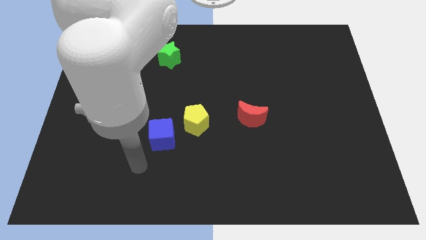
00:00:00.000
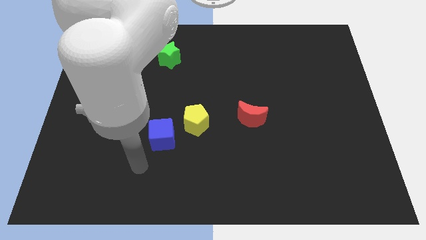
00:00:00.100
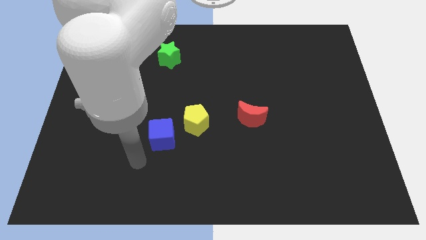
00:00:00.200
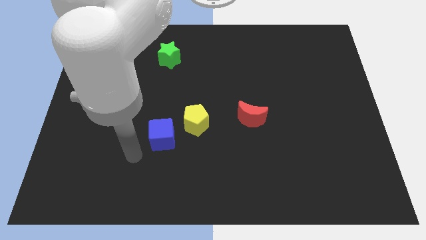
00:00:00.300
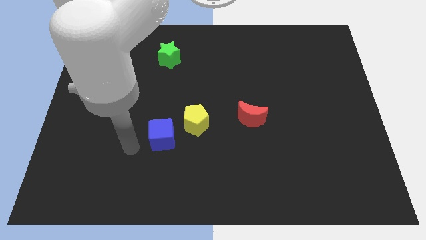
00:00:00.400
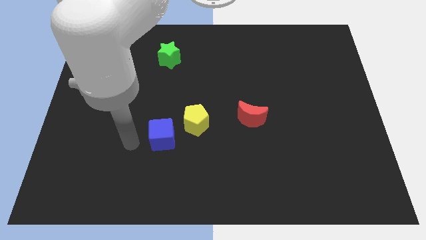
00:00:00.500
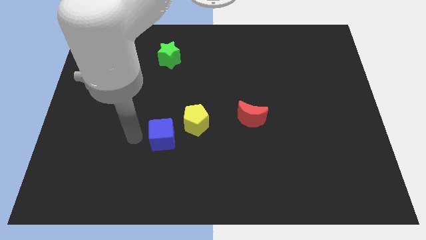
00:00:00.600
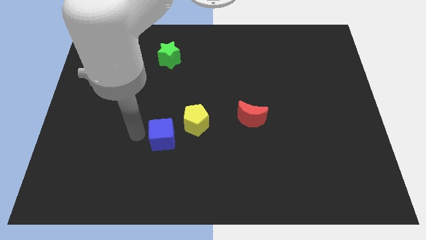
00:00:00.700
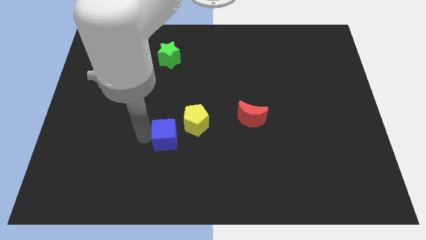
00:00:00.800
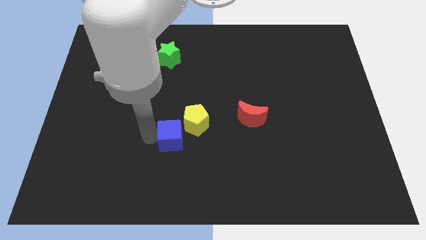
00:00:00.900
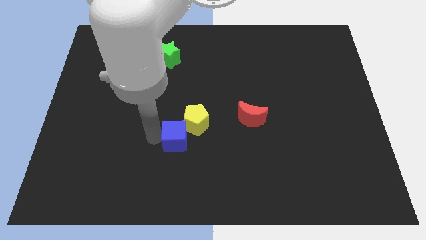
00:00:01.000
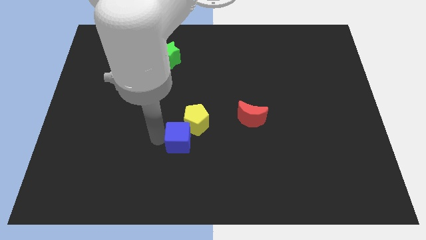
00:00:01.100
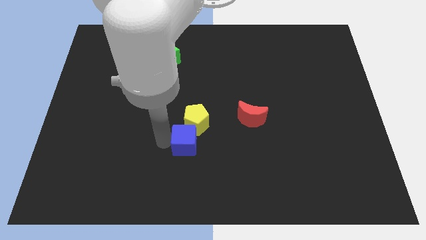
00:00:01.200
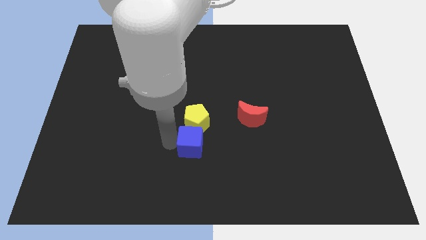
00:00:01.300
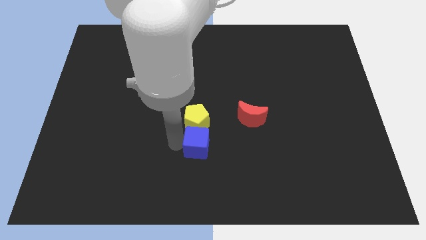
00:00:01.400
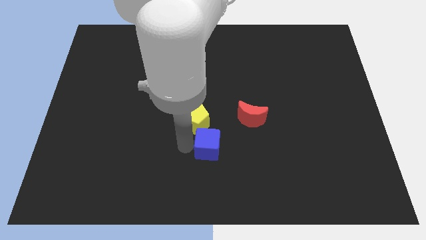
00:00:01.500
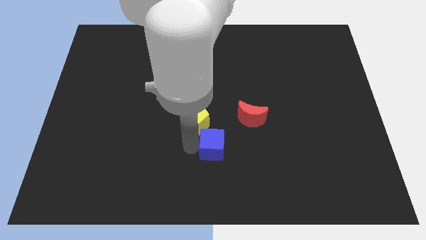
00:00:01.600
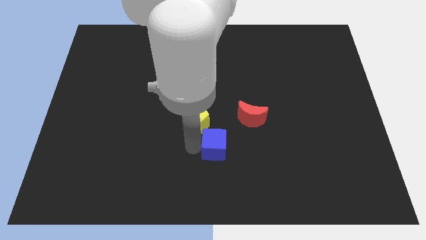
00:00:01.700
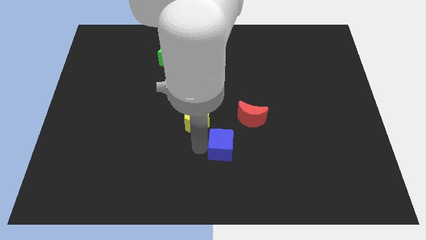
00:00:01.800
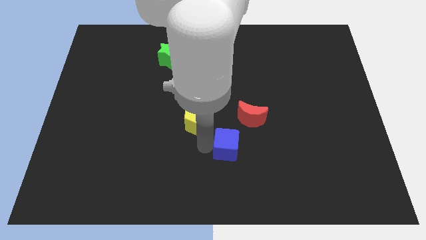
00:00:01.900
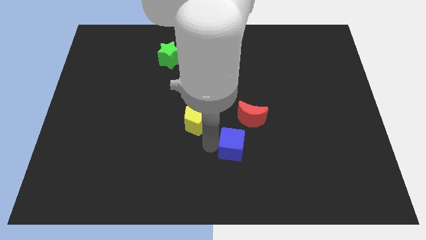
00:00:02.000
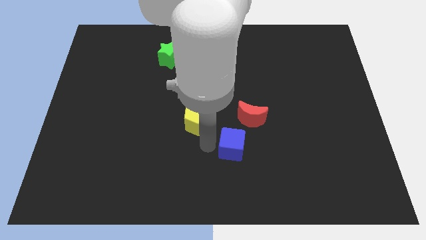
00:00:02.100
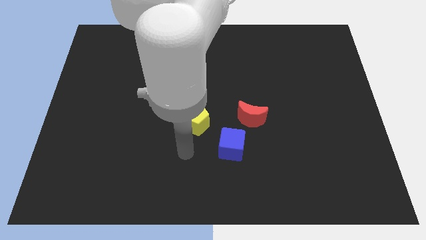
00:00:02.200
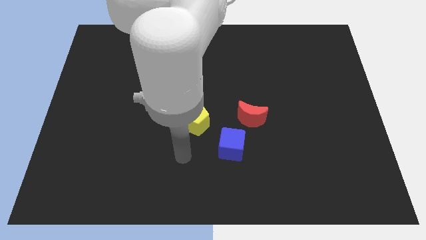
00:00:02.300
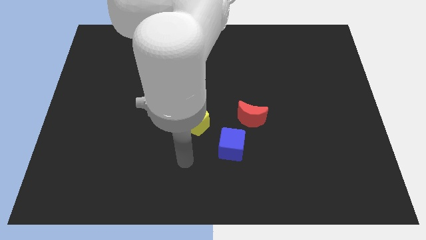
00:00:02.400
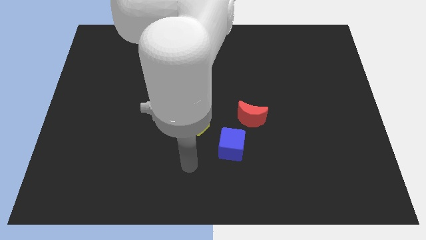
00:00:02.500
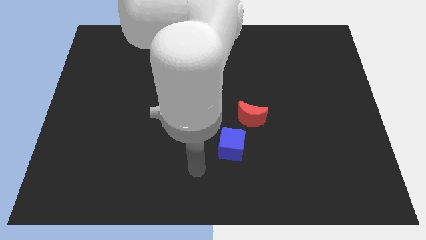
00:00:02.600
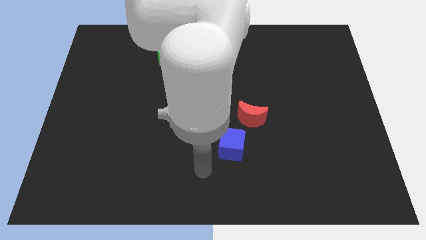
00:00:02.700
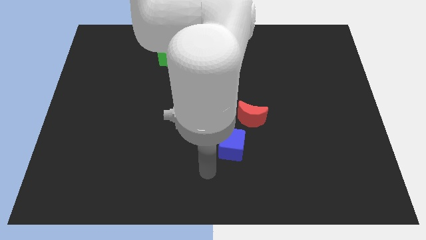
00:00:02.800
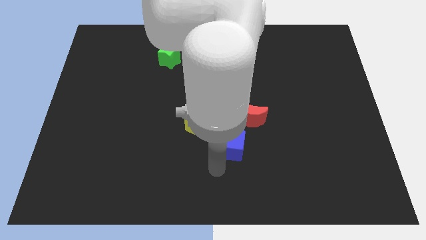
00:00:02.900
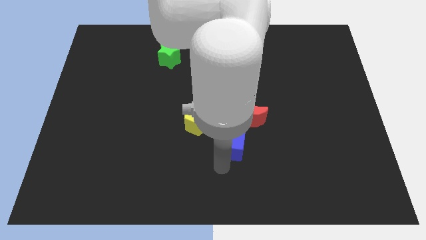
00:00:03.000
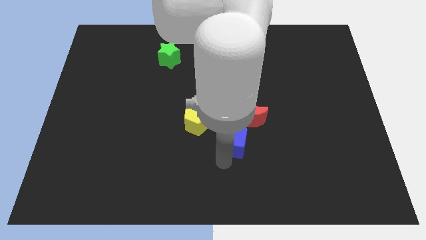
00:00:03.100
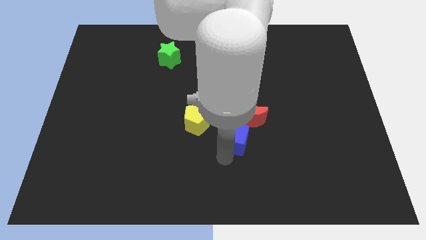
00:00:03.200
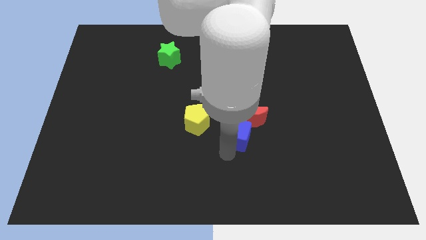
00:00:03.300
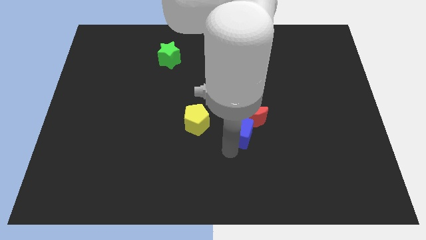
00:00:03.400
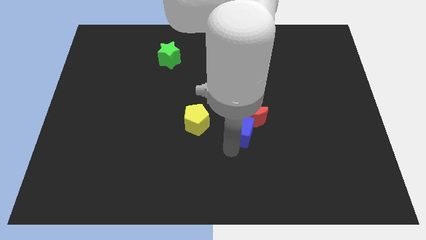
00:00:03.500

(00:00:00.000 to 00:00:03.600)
put the blue block to the red block

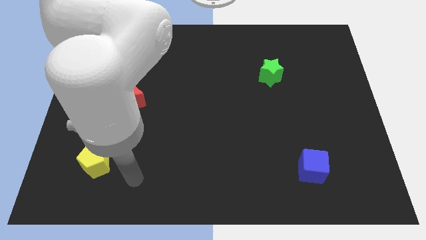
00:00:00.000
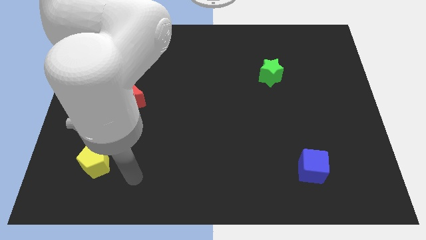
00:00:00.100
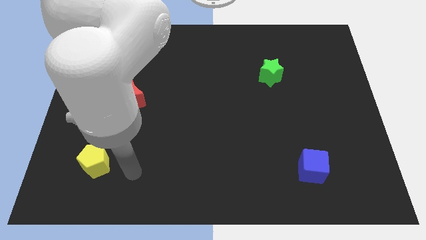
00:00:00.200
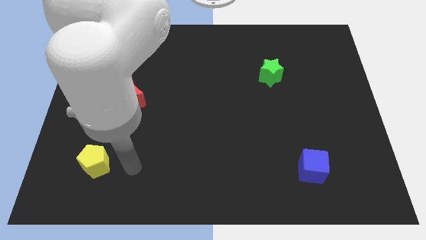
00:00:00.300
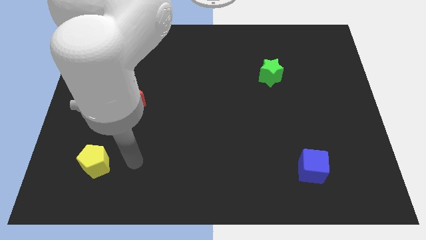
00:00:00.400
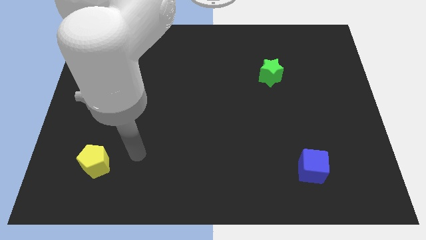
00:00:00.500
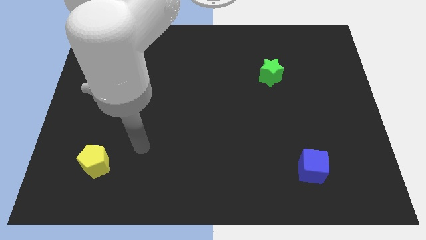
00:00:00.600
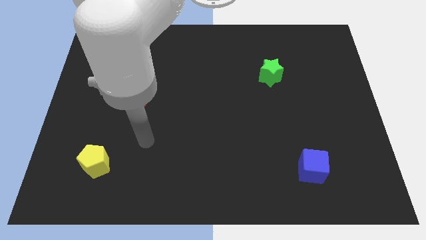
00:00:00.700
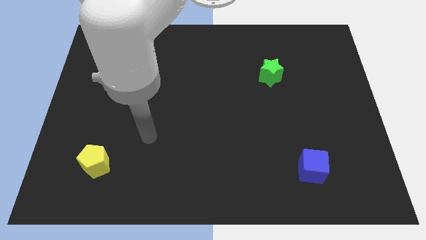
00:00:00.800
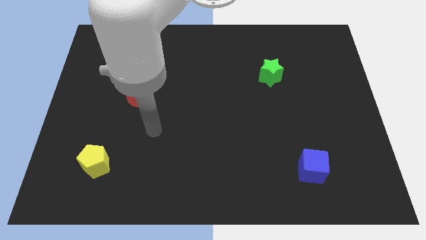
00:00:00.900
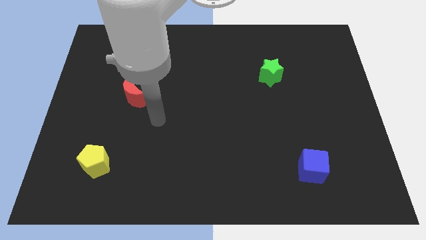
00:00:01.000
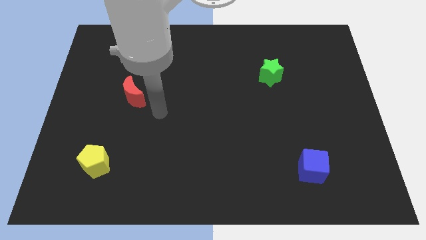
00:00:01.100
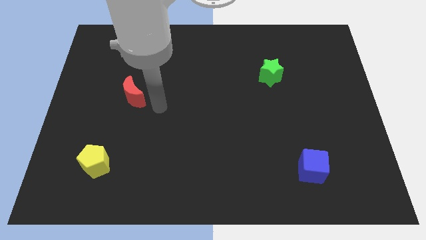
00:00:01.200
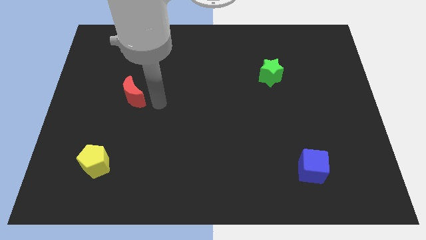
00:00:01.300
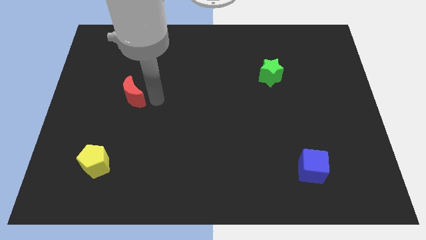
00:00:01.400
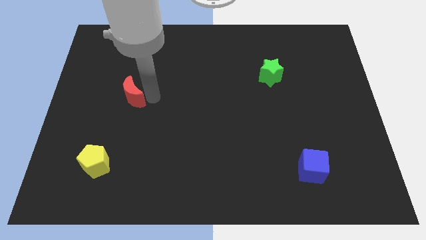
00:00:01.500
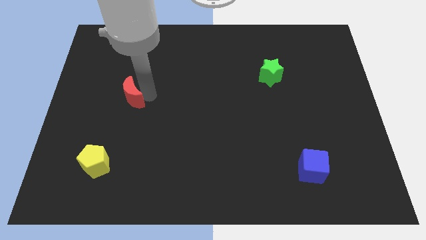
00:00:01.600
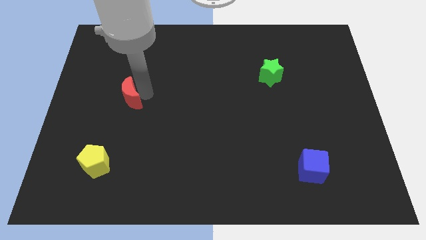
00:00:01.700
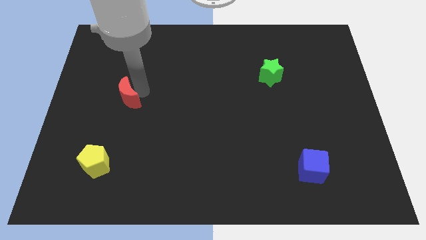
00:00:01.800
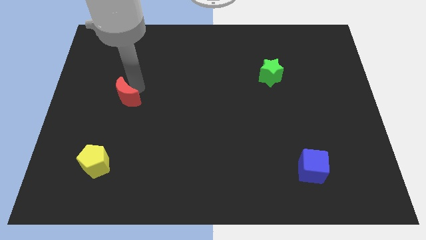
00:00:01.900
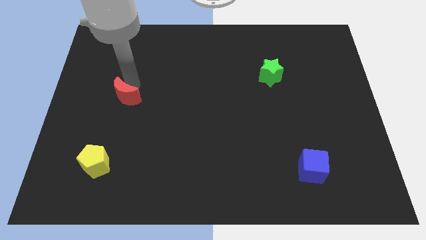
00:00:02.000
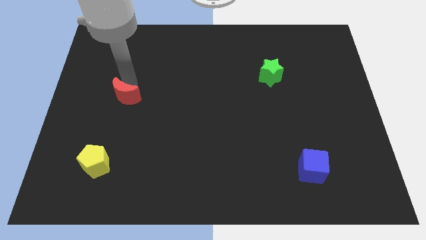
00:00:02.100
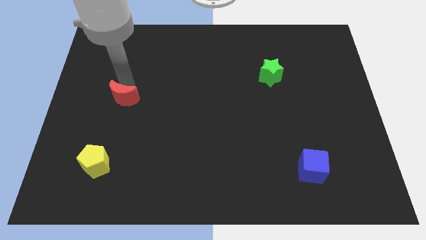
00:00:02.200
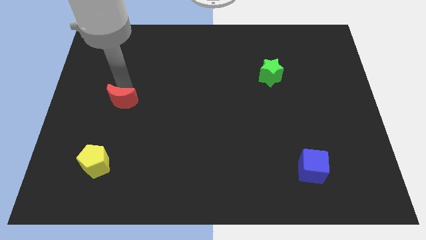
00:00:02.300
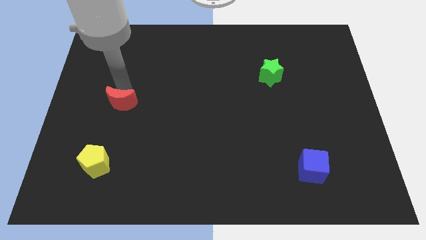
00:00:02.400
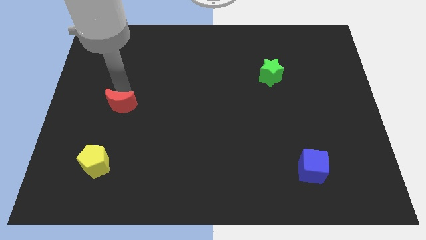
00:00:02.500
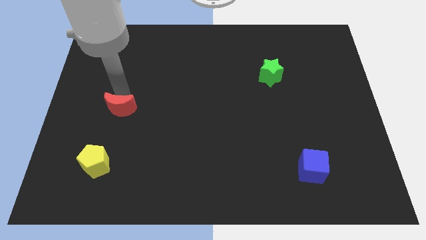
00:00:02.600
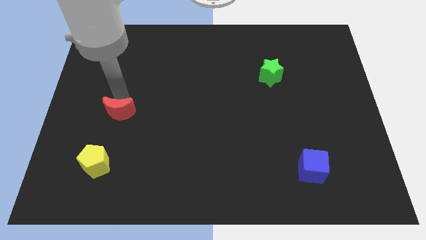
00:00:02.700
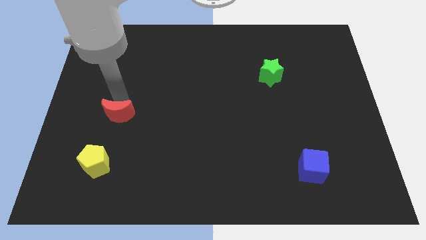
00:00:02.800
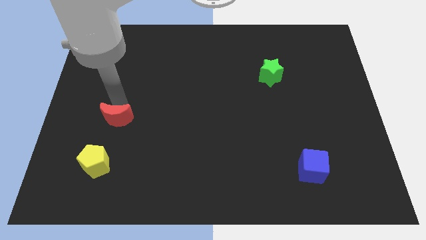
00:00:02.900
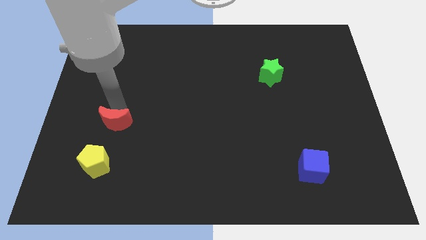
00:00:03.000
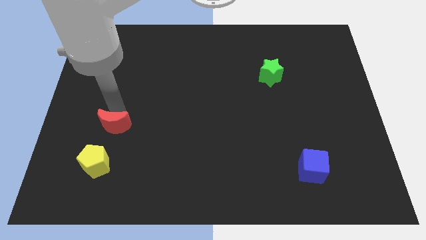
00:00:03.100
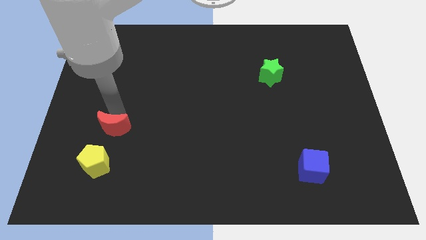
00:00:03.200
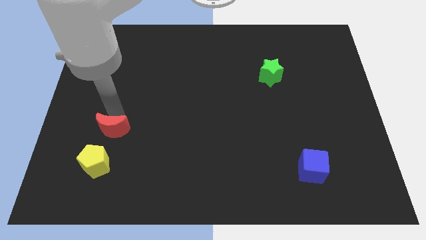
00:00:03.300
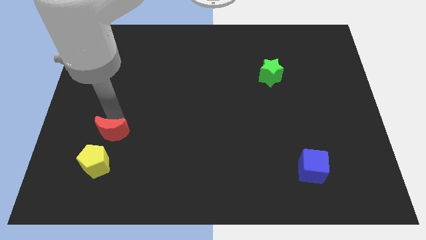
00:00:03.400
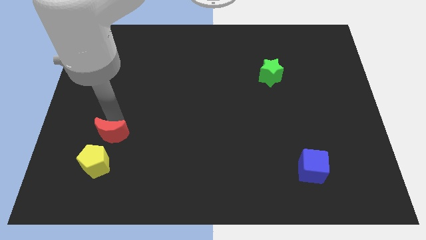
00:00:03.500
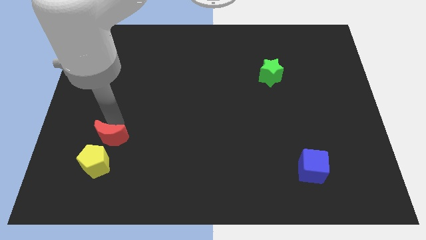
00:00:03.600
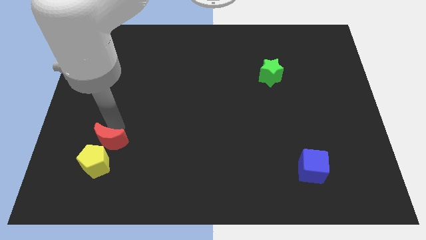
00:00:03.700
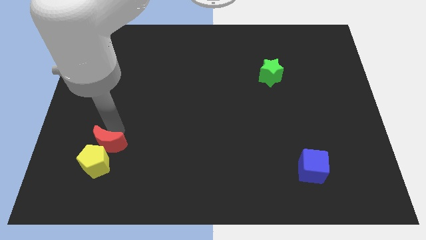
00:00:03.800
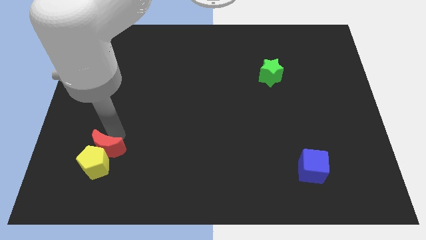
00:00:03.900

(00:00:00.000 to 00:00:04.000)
put the moon next to the yellow block

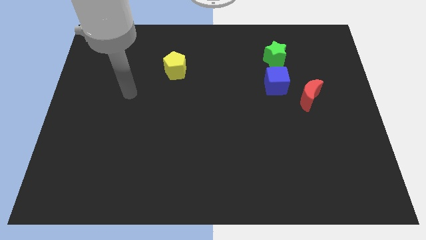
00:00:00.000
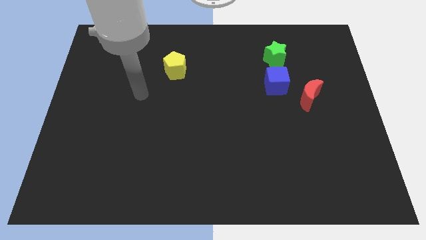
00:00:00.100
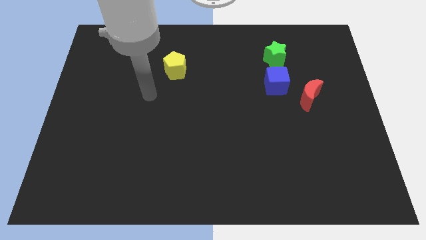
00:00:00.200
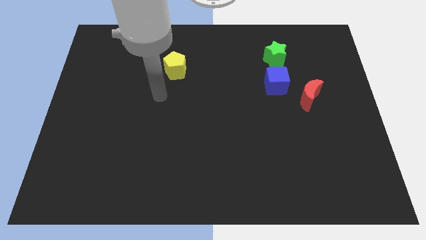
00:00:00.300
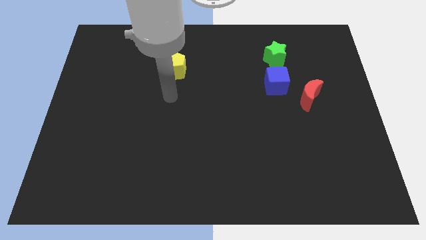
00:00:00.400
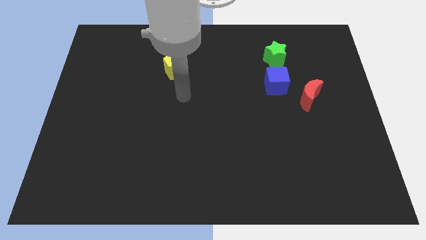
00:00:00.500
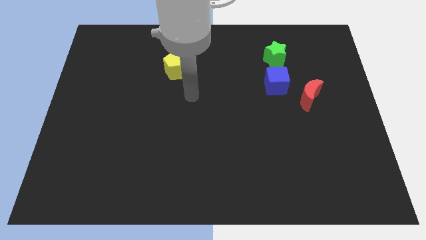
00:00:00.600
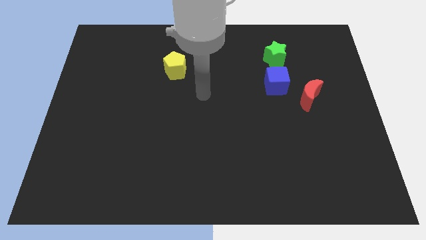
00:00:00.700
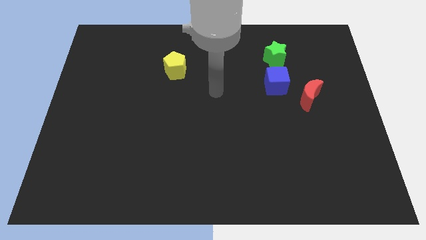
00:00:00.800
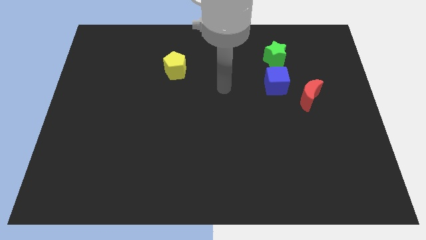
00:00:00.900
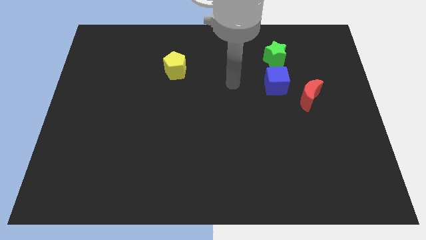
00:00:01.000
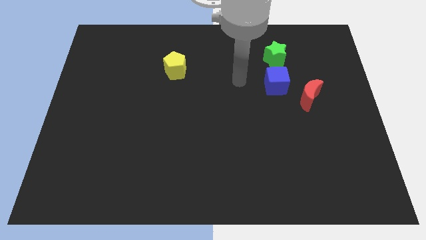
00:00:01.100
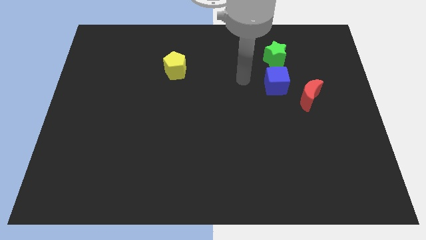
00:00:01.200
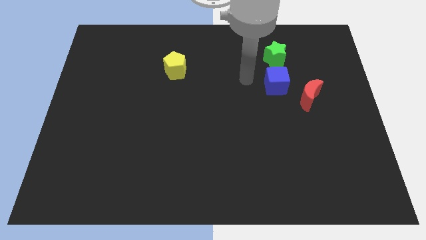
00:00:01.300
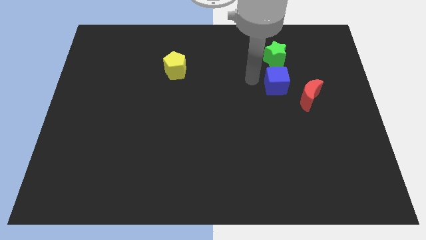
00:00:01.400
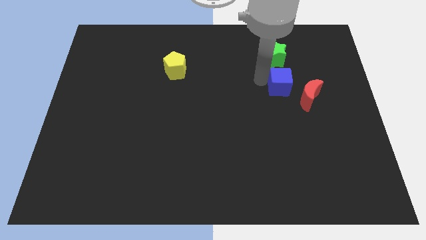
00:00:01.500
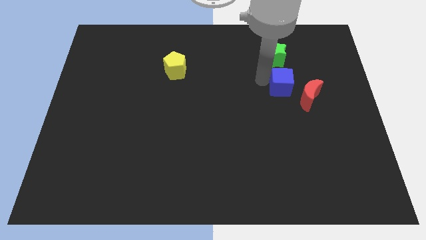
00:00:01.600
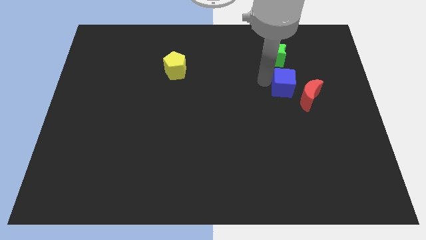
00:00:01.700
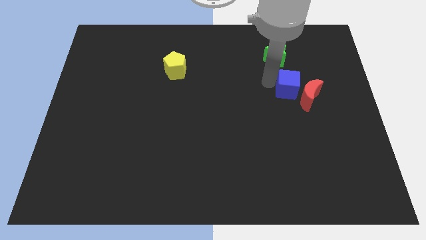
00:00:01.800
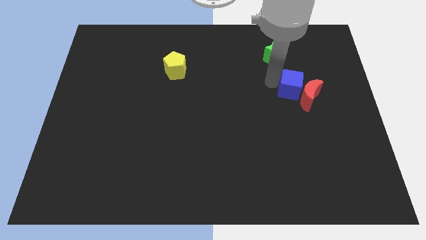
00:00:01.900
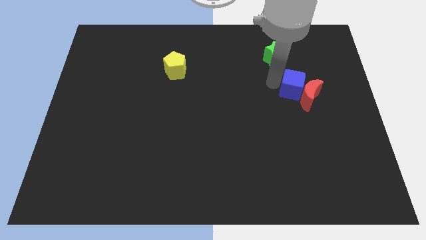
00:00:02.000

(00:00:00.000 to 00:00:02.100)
slide the cube next to the moon
